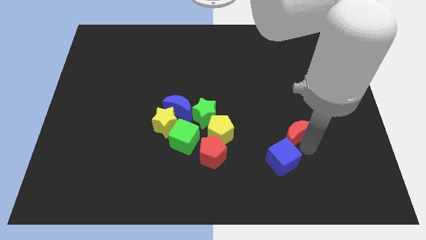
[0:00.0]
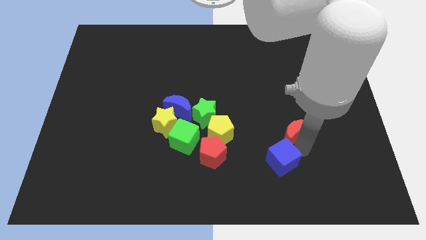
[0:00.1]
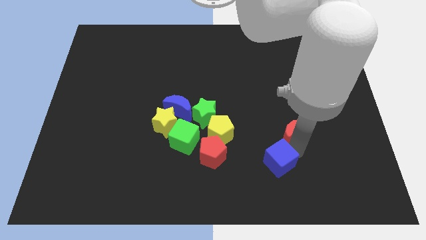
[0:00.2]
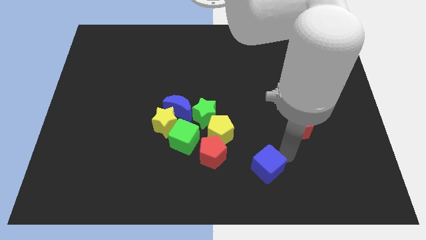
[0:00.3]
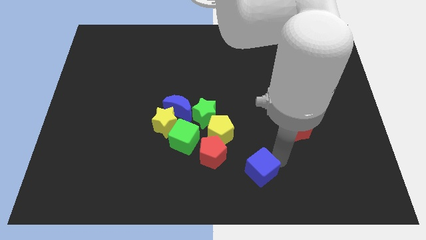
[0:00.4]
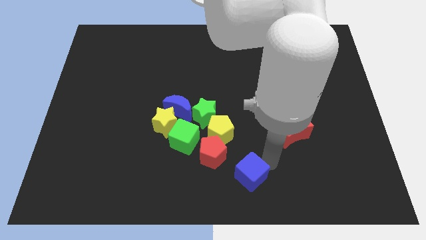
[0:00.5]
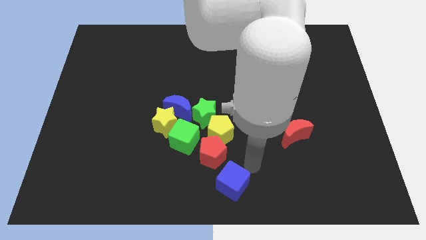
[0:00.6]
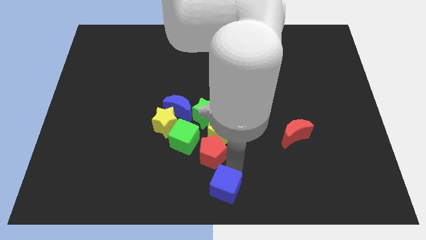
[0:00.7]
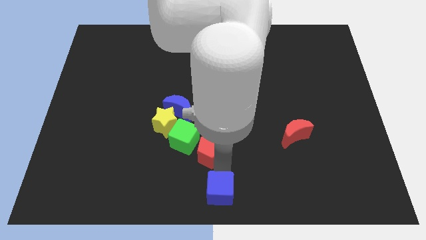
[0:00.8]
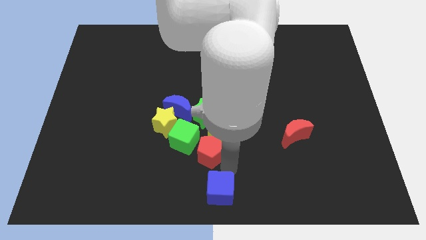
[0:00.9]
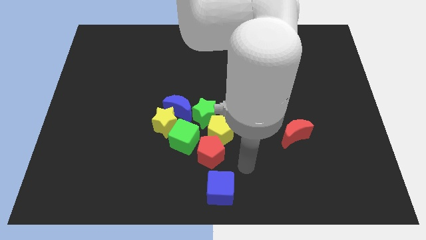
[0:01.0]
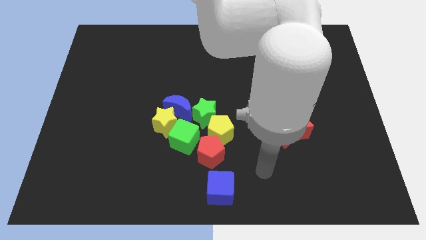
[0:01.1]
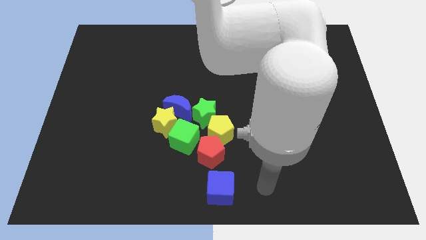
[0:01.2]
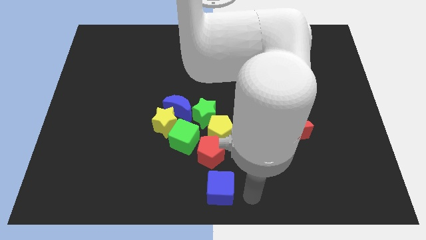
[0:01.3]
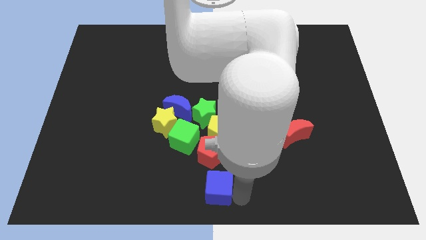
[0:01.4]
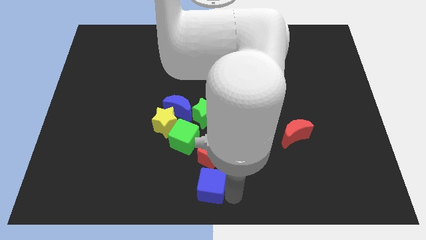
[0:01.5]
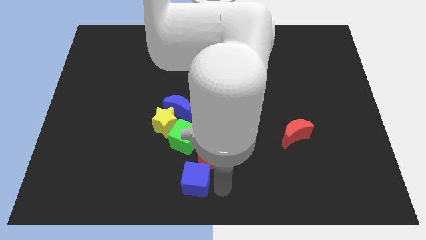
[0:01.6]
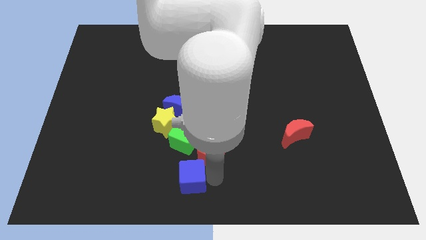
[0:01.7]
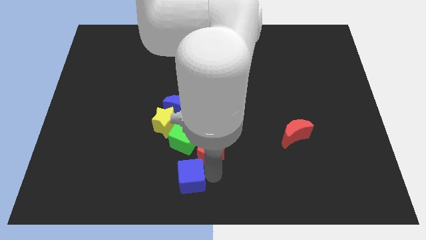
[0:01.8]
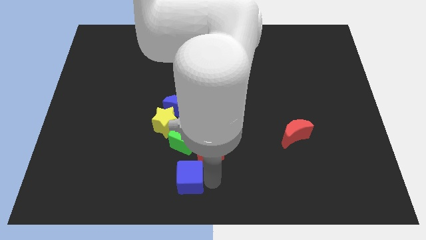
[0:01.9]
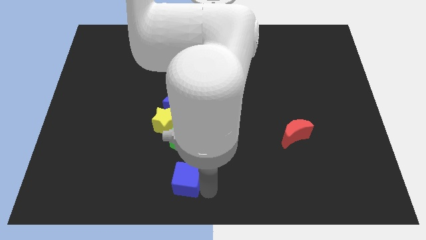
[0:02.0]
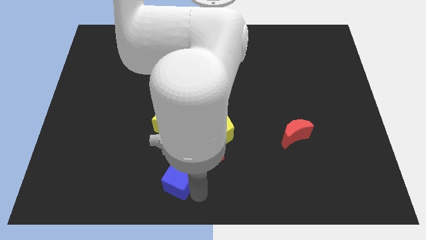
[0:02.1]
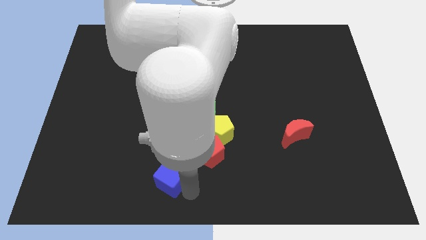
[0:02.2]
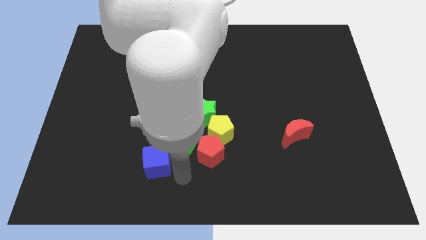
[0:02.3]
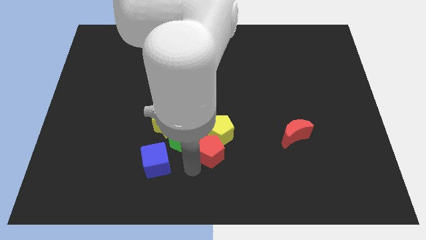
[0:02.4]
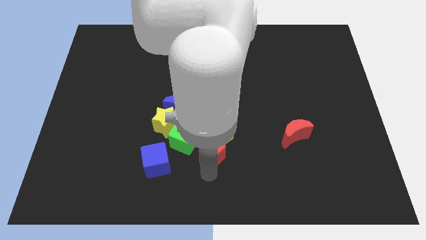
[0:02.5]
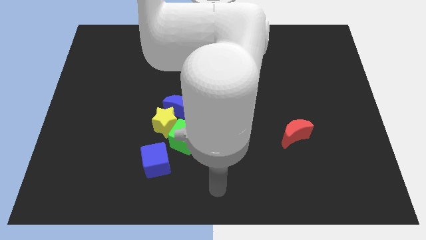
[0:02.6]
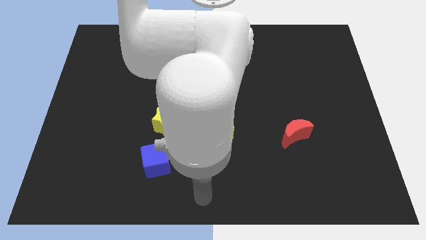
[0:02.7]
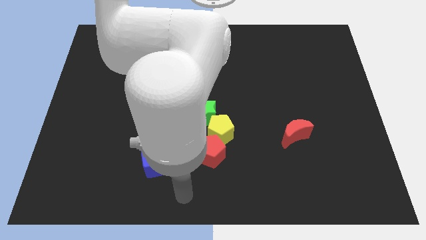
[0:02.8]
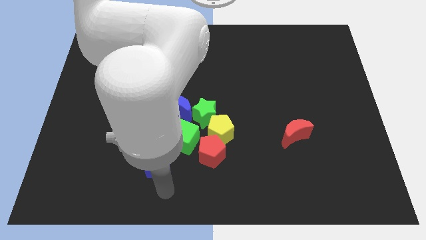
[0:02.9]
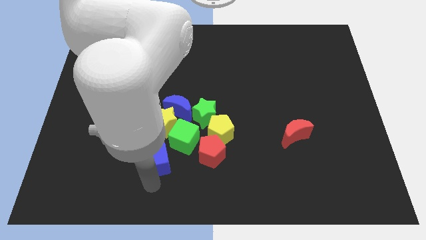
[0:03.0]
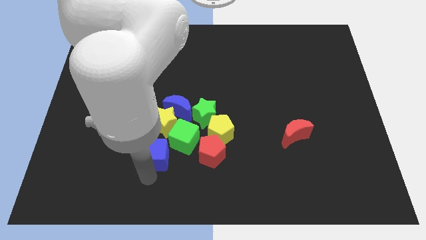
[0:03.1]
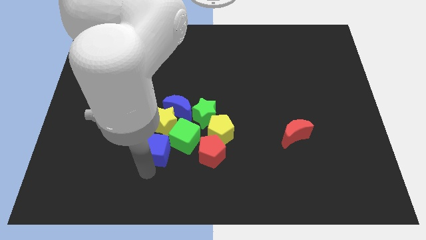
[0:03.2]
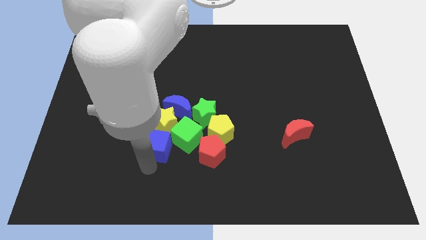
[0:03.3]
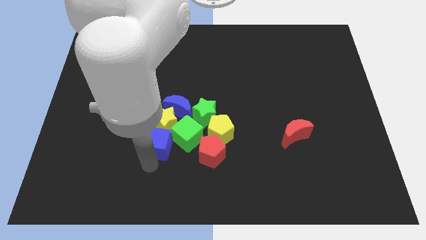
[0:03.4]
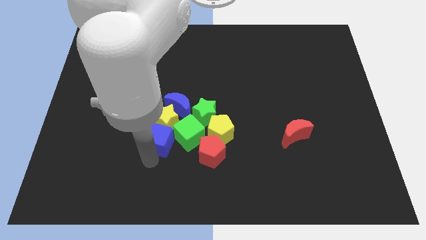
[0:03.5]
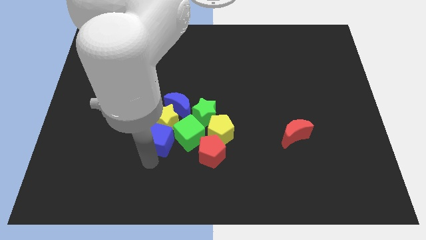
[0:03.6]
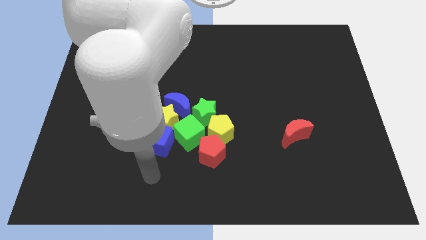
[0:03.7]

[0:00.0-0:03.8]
push the blue cube into the bottom of the yellow star

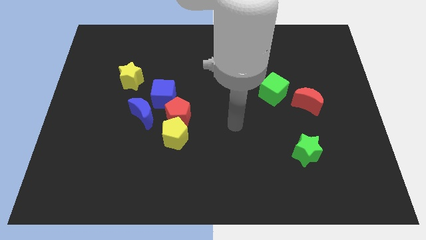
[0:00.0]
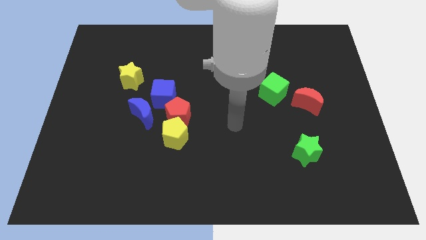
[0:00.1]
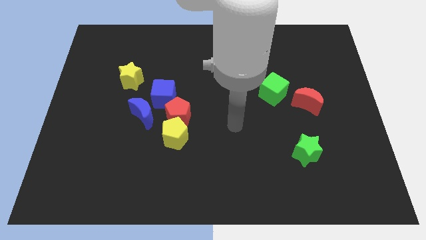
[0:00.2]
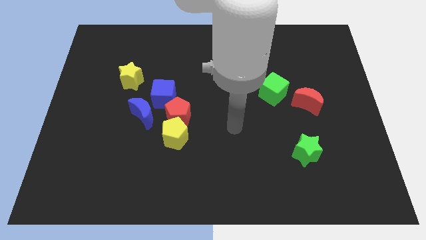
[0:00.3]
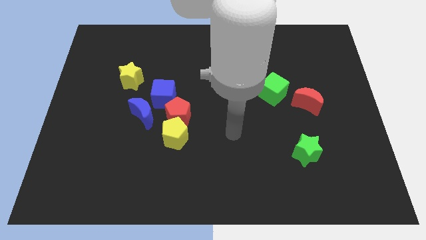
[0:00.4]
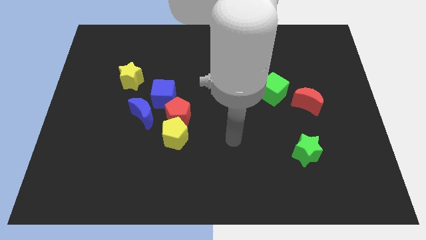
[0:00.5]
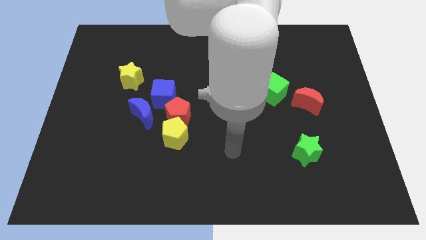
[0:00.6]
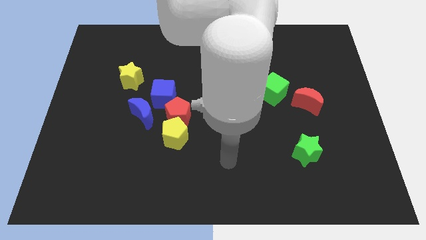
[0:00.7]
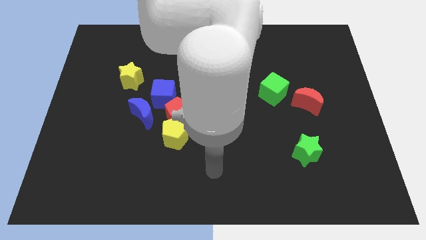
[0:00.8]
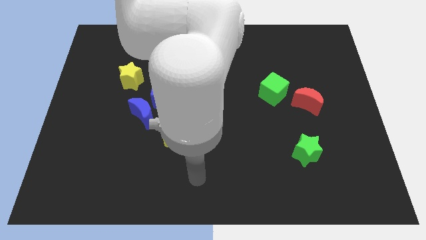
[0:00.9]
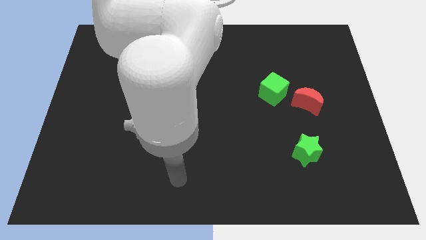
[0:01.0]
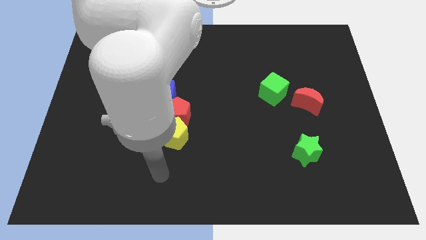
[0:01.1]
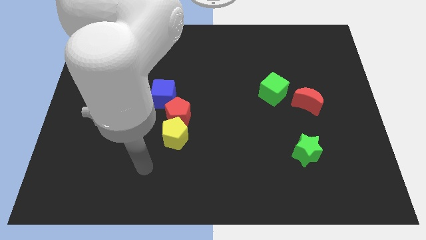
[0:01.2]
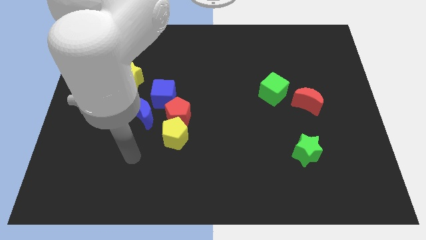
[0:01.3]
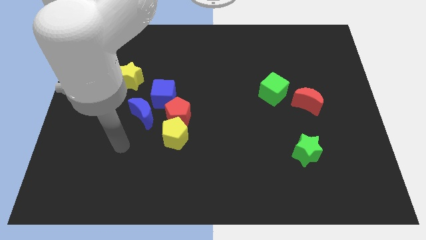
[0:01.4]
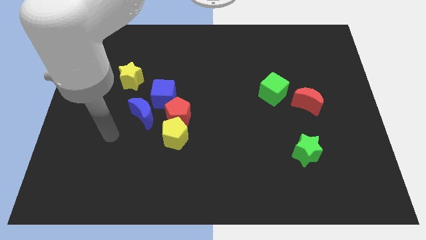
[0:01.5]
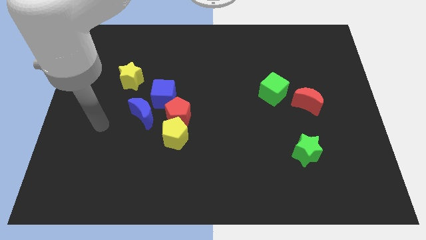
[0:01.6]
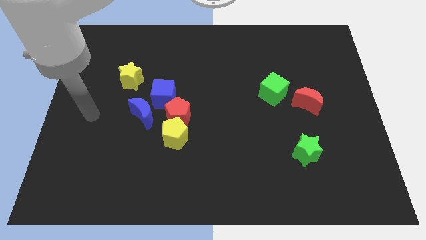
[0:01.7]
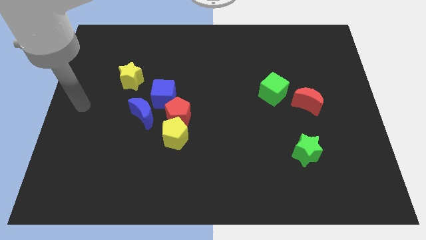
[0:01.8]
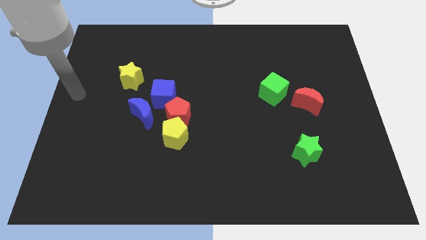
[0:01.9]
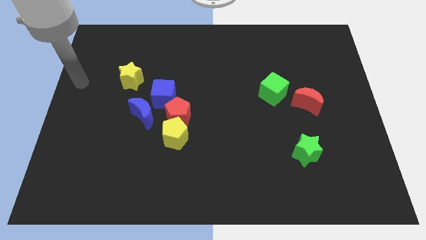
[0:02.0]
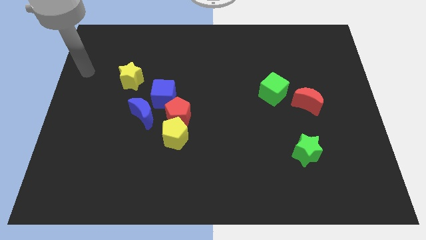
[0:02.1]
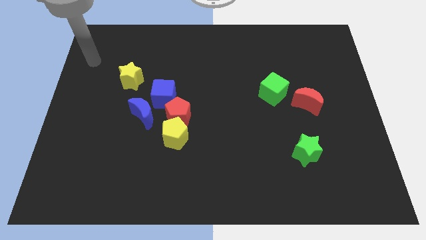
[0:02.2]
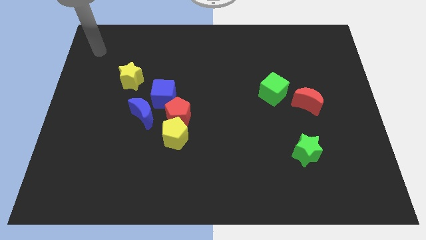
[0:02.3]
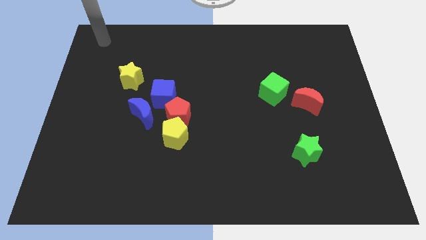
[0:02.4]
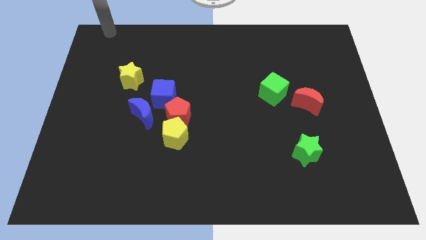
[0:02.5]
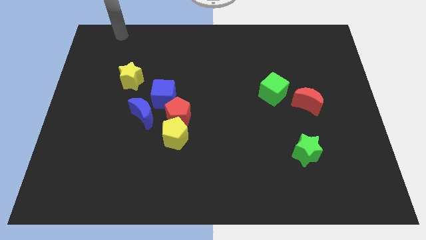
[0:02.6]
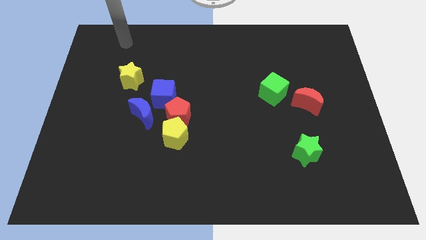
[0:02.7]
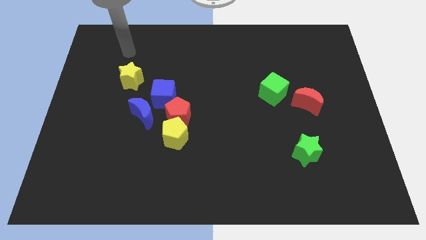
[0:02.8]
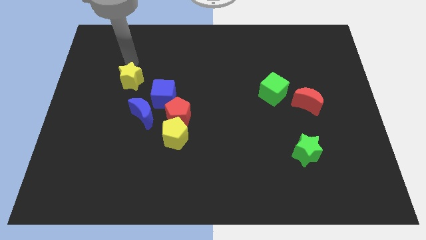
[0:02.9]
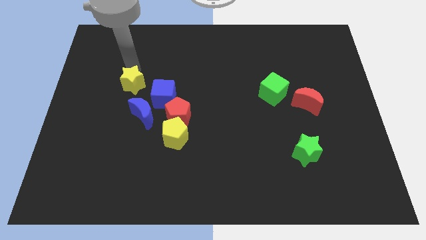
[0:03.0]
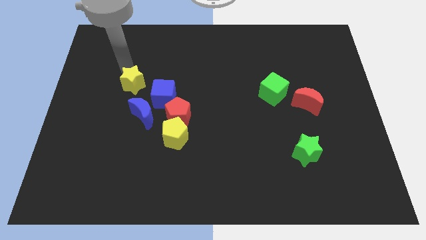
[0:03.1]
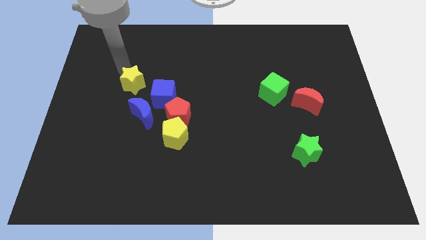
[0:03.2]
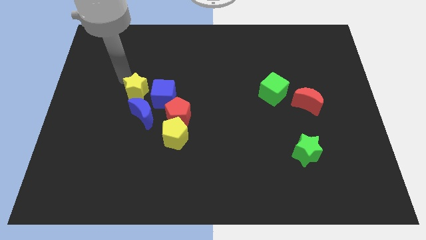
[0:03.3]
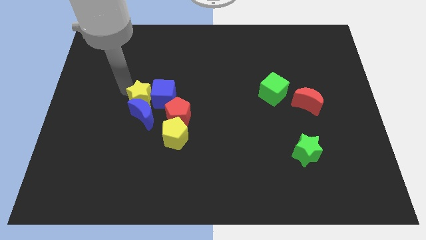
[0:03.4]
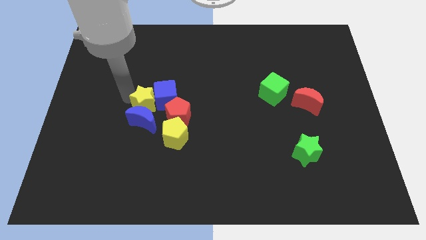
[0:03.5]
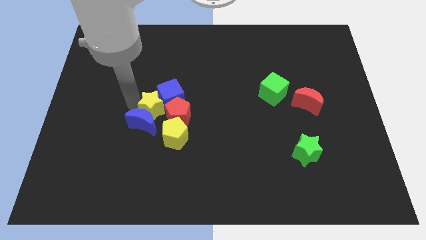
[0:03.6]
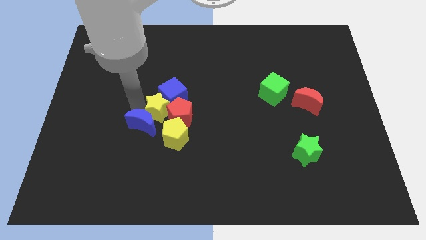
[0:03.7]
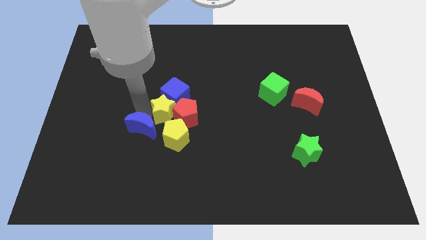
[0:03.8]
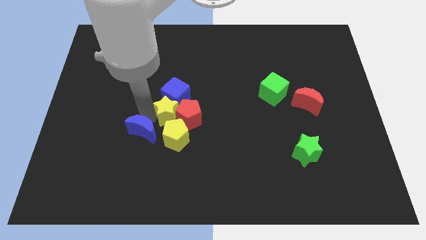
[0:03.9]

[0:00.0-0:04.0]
push the yellow star into the red pentagon

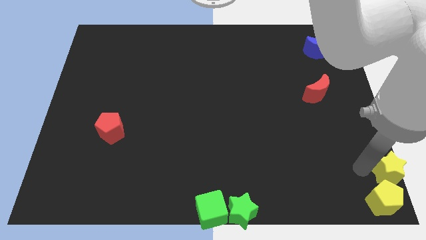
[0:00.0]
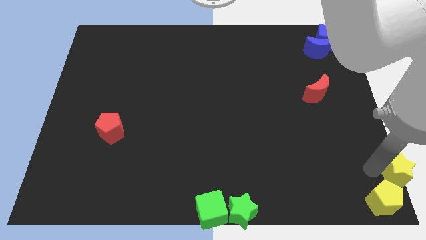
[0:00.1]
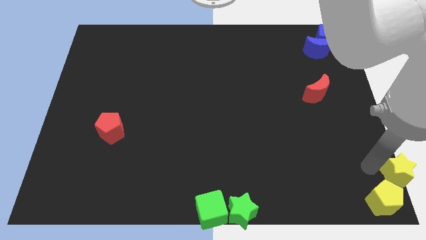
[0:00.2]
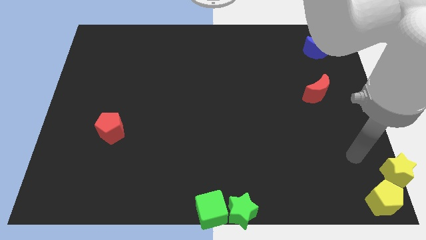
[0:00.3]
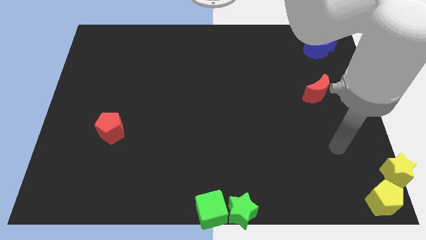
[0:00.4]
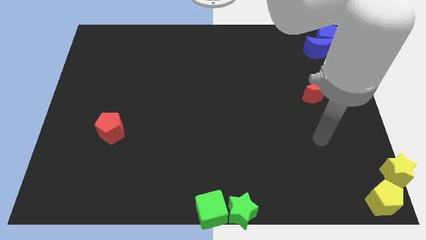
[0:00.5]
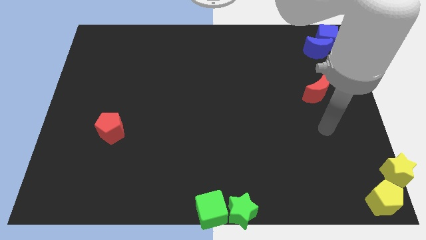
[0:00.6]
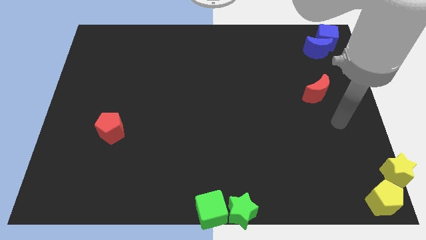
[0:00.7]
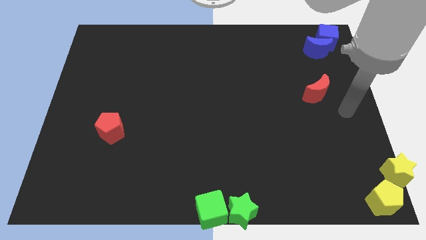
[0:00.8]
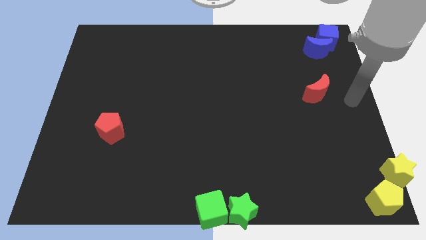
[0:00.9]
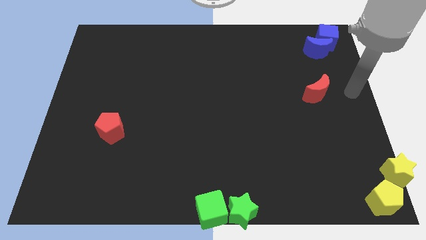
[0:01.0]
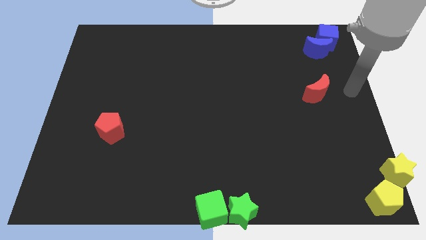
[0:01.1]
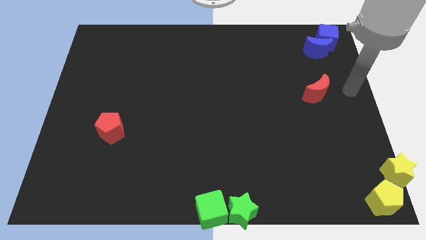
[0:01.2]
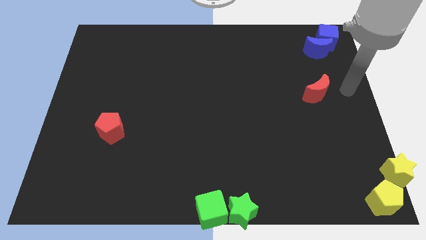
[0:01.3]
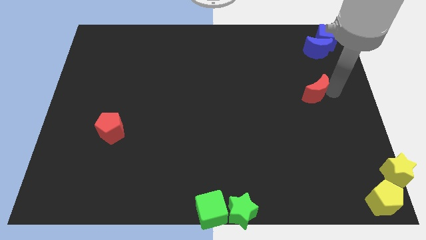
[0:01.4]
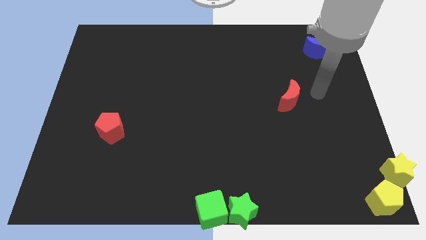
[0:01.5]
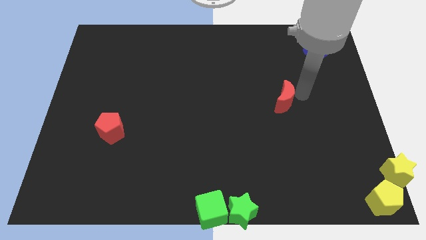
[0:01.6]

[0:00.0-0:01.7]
push the red moon towards the left
